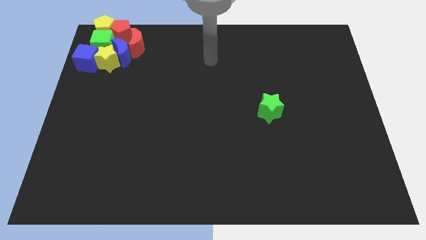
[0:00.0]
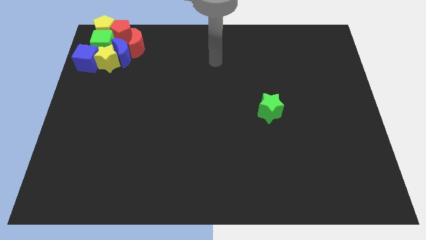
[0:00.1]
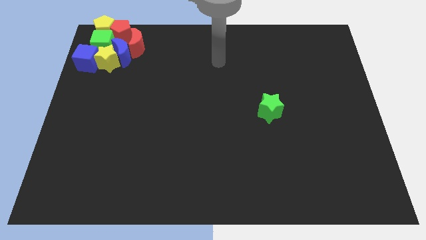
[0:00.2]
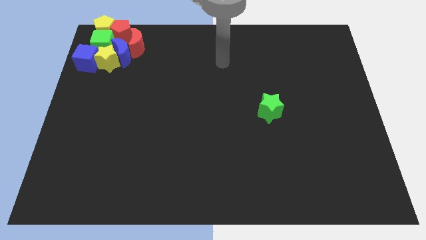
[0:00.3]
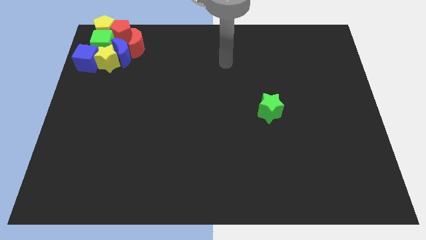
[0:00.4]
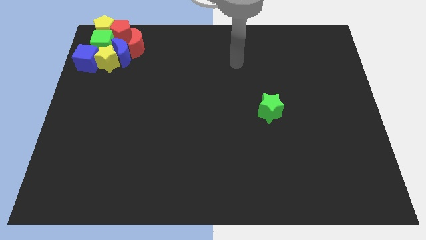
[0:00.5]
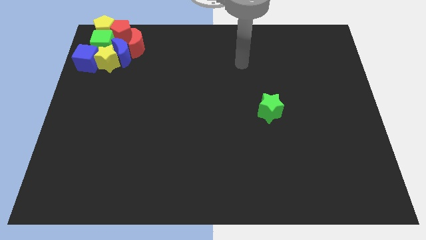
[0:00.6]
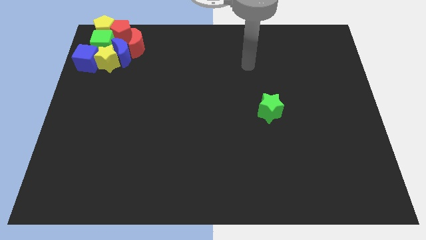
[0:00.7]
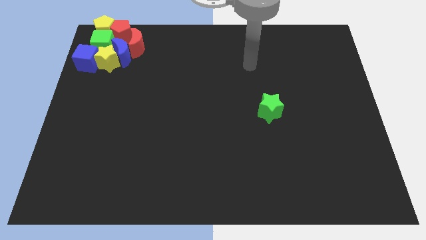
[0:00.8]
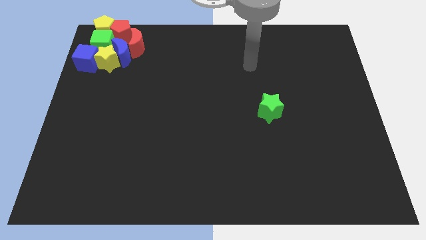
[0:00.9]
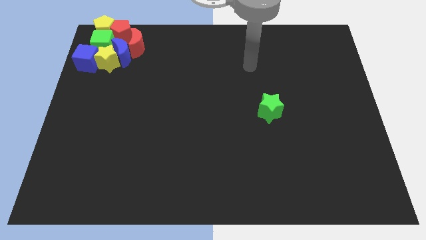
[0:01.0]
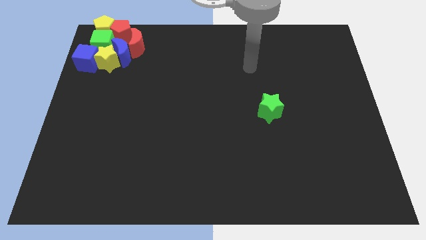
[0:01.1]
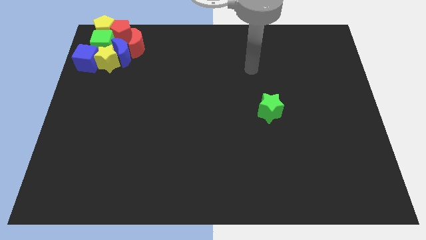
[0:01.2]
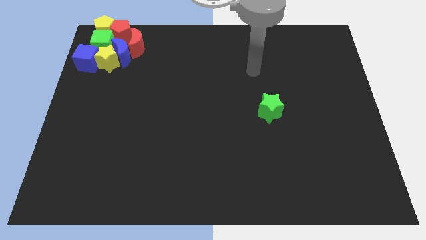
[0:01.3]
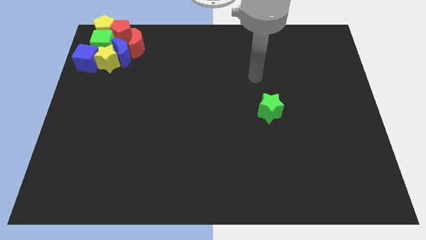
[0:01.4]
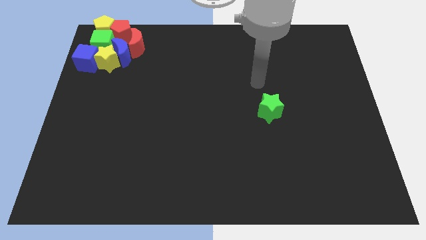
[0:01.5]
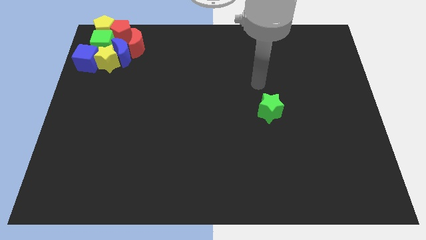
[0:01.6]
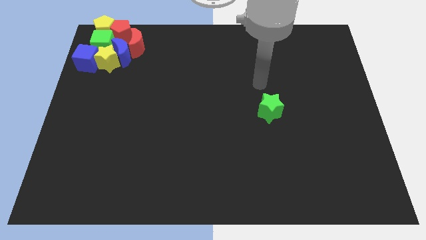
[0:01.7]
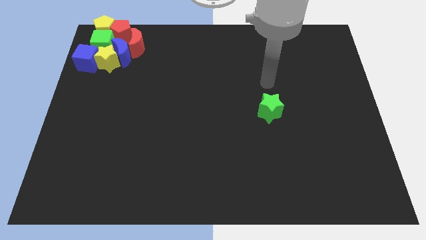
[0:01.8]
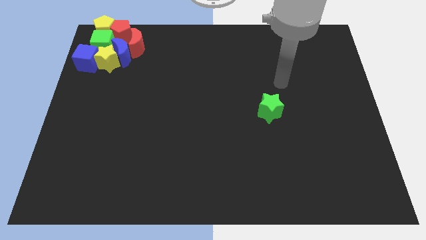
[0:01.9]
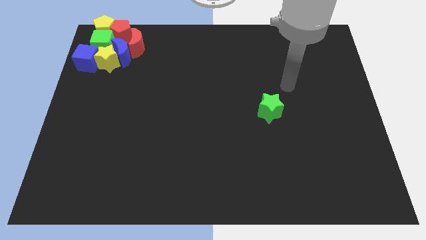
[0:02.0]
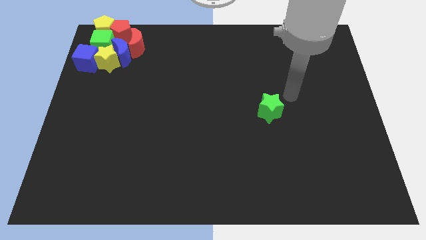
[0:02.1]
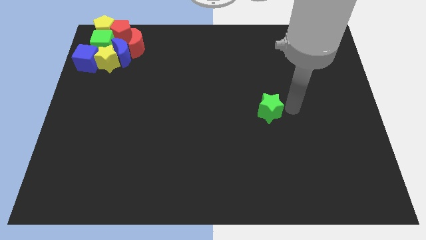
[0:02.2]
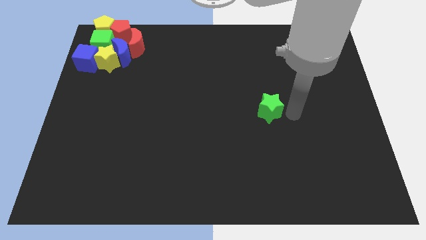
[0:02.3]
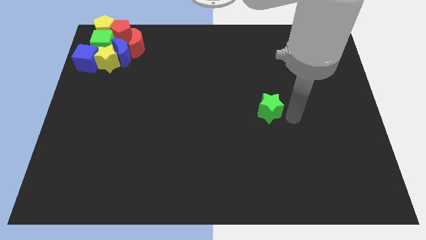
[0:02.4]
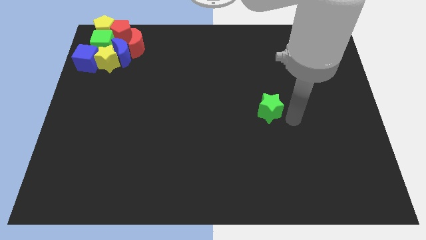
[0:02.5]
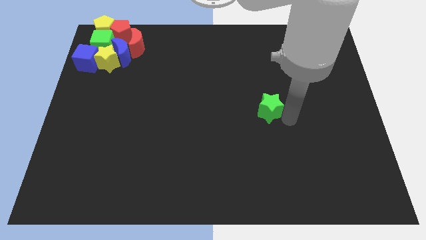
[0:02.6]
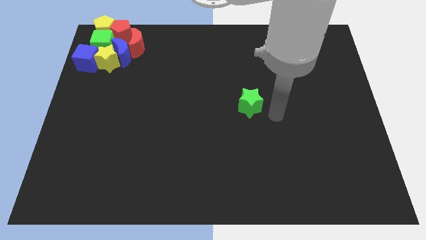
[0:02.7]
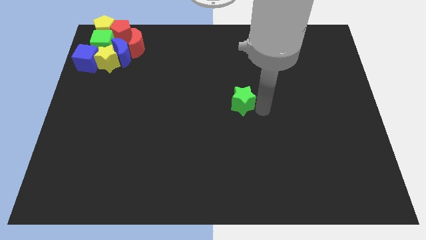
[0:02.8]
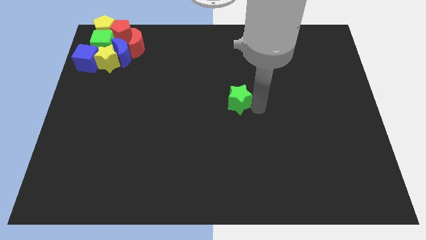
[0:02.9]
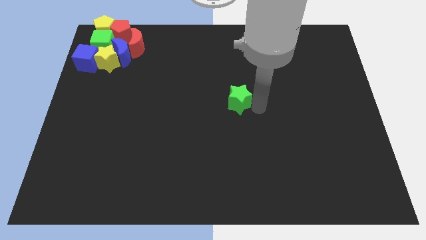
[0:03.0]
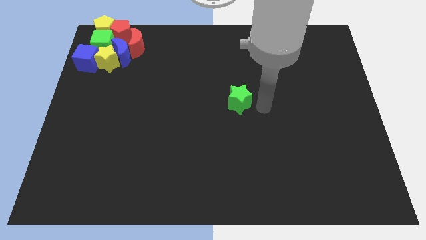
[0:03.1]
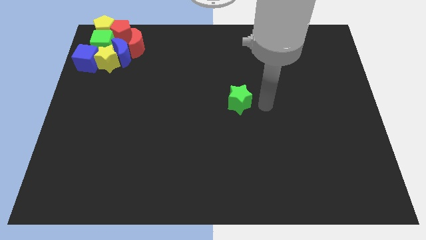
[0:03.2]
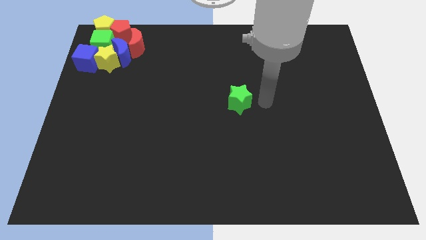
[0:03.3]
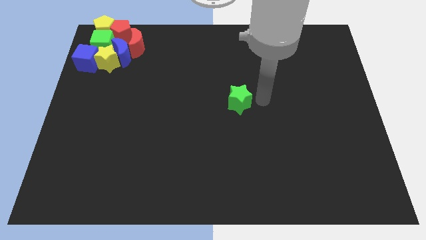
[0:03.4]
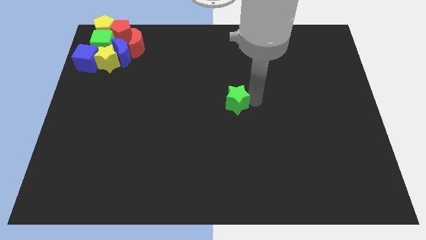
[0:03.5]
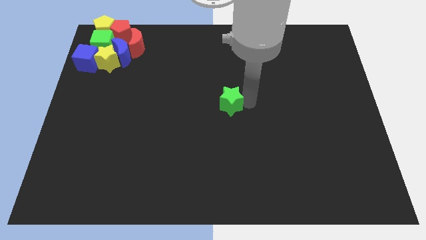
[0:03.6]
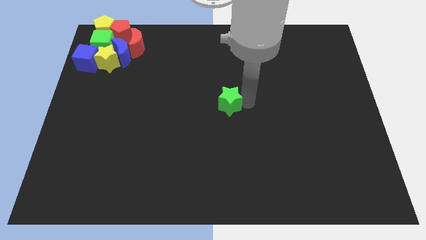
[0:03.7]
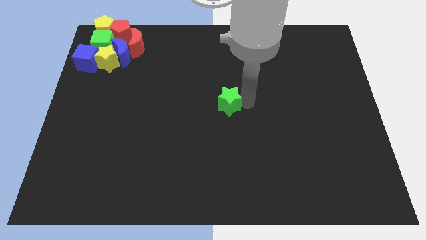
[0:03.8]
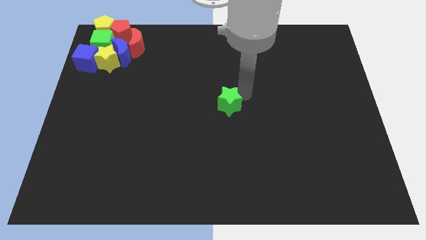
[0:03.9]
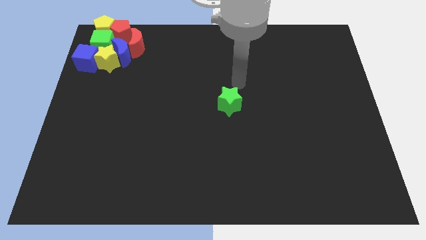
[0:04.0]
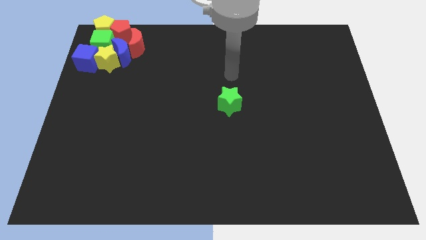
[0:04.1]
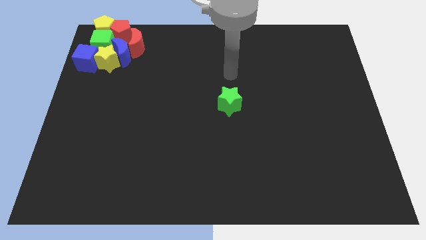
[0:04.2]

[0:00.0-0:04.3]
place the green star to the center of board

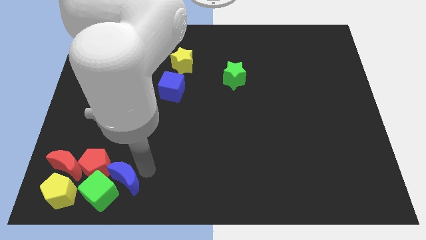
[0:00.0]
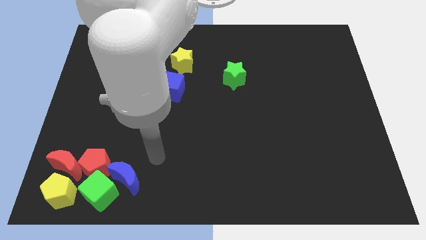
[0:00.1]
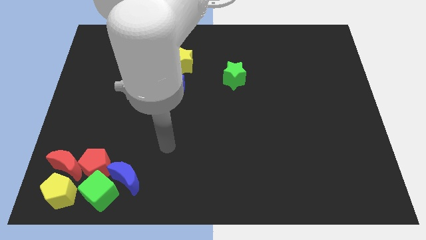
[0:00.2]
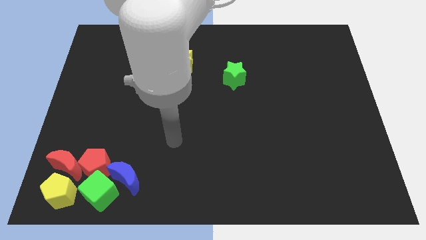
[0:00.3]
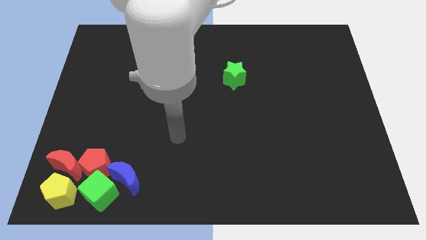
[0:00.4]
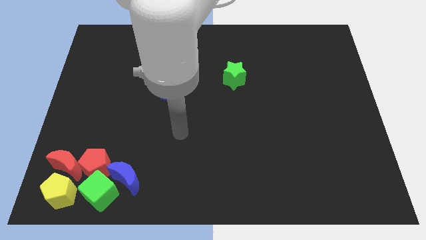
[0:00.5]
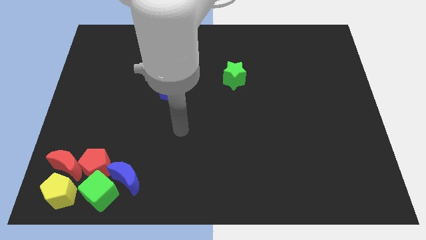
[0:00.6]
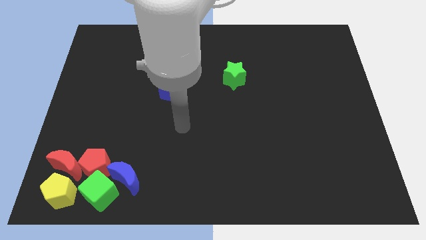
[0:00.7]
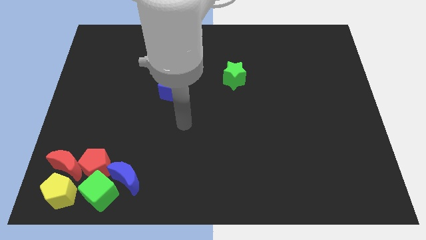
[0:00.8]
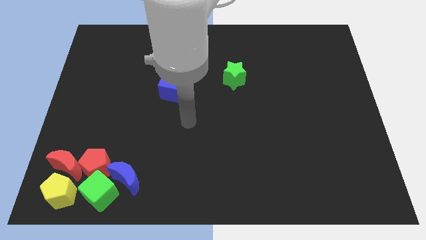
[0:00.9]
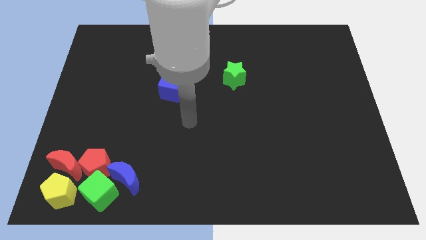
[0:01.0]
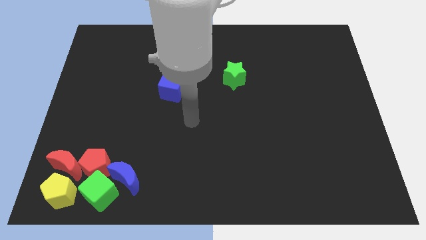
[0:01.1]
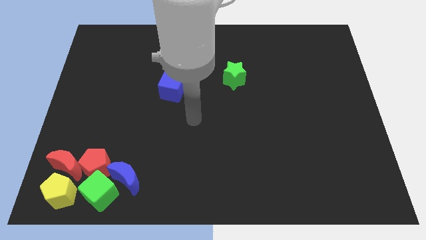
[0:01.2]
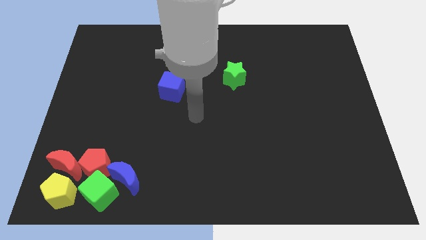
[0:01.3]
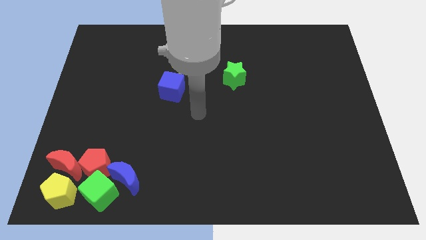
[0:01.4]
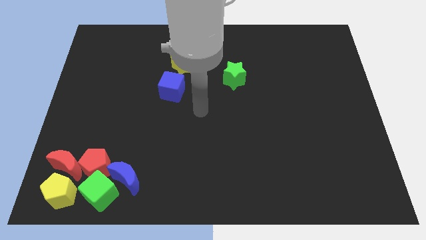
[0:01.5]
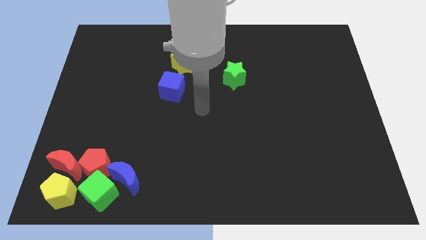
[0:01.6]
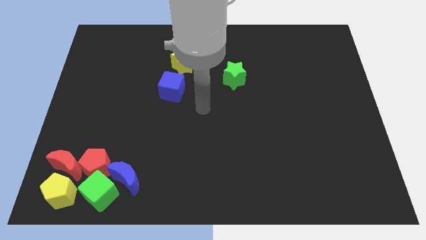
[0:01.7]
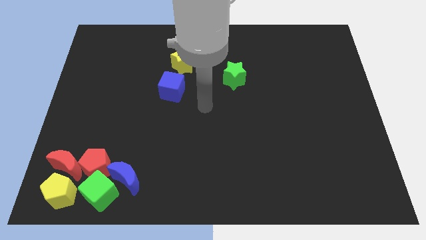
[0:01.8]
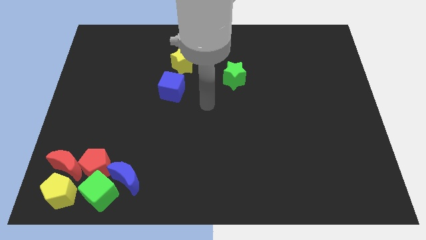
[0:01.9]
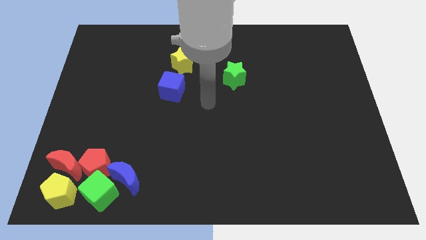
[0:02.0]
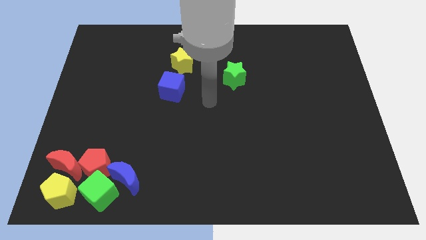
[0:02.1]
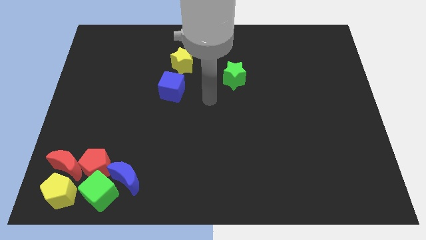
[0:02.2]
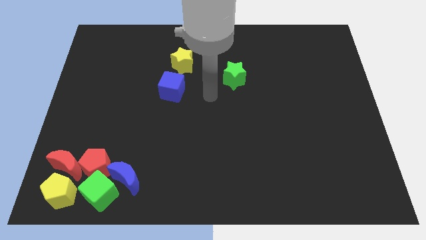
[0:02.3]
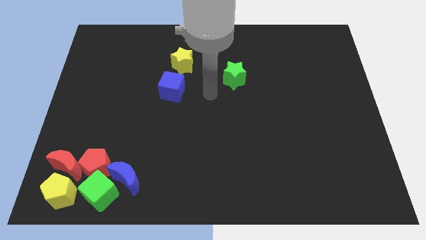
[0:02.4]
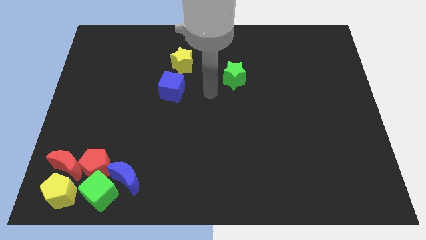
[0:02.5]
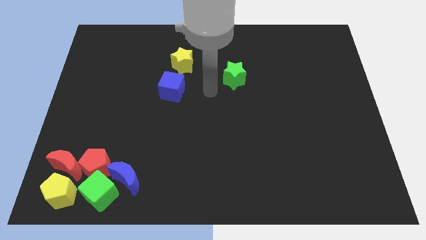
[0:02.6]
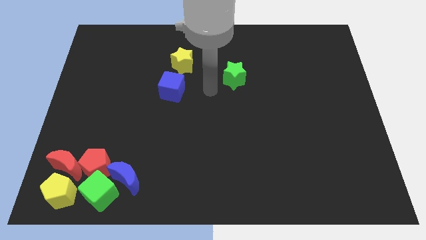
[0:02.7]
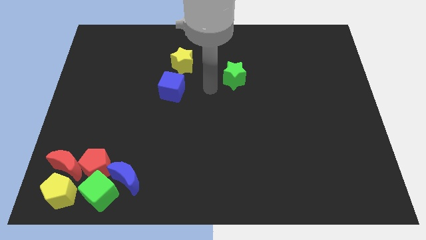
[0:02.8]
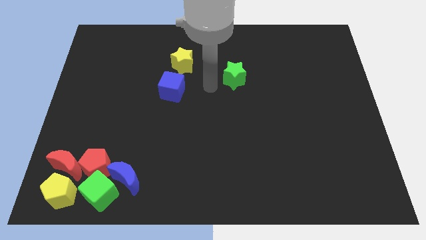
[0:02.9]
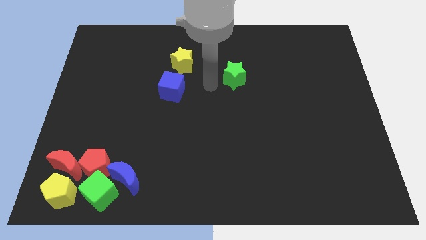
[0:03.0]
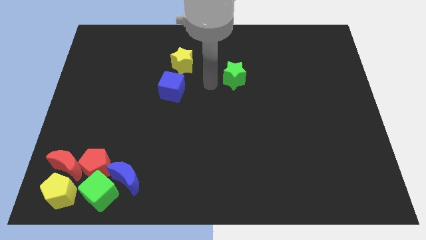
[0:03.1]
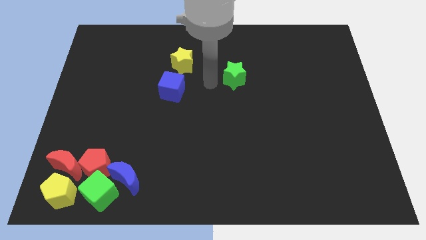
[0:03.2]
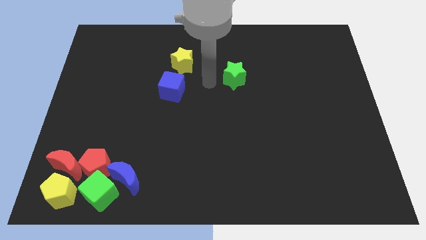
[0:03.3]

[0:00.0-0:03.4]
move the arm left to the green star

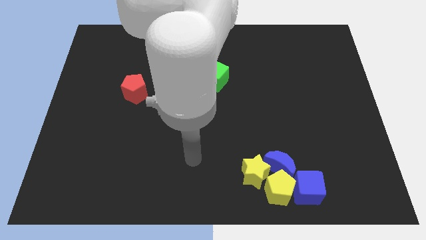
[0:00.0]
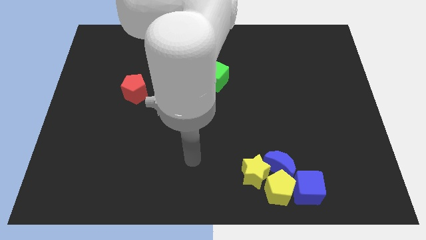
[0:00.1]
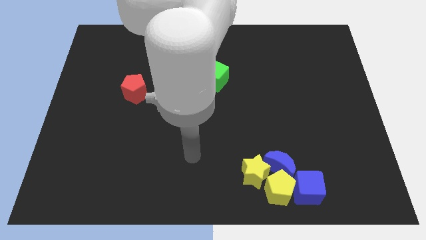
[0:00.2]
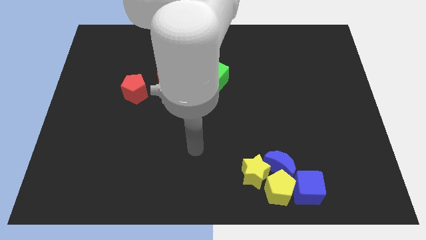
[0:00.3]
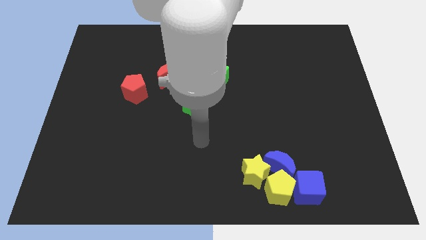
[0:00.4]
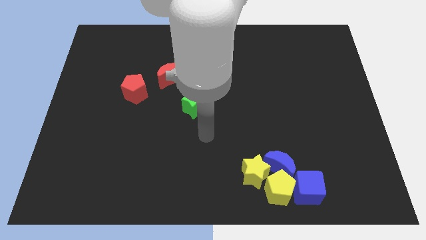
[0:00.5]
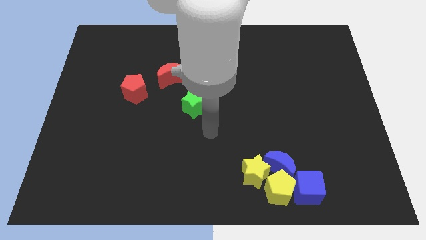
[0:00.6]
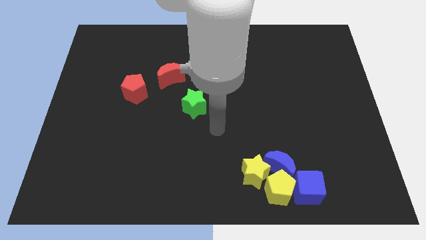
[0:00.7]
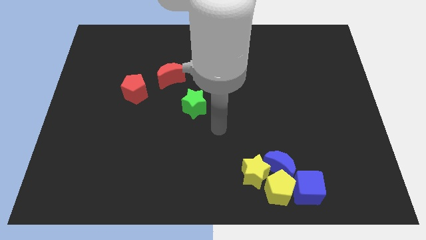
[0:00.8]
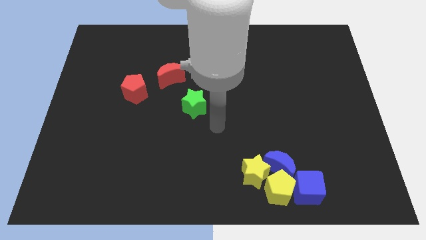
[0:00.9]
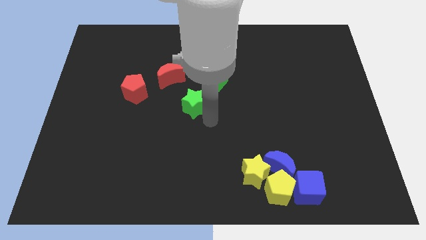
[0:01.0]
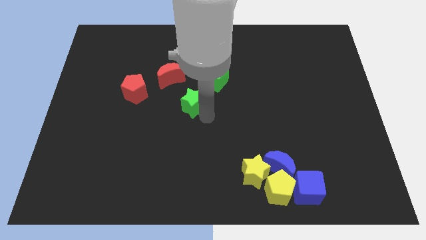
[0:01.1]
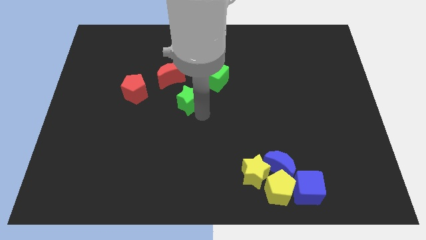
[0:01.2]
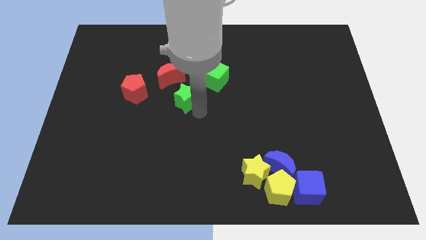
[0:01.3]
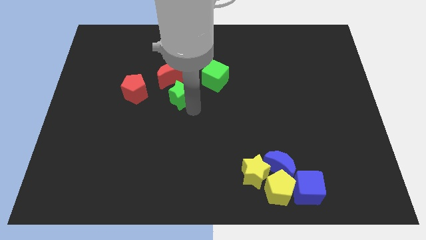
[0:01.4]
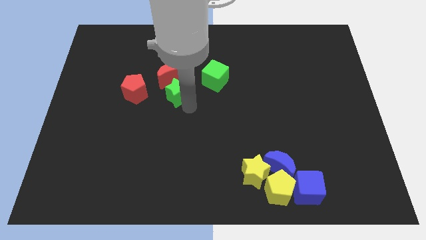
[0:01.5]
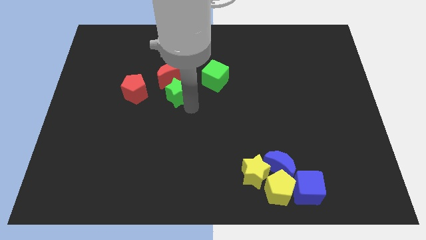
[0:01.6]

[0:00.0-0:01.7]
move the green star below the red crescent
